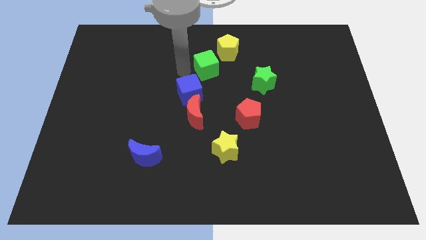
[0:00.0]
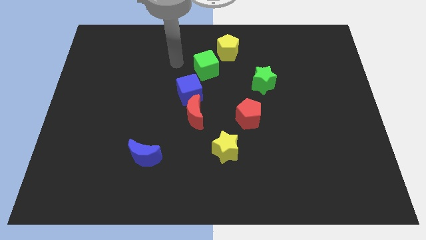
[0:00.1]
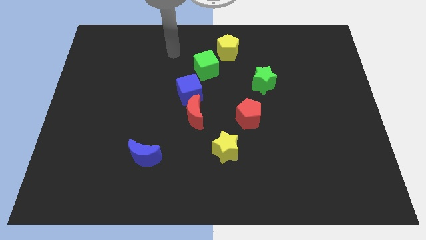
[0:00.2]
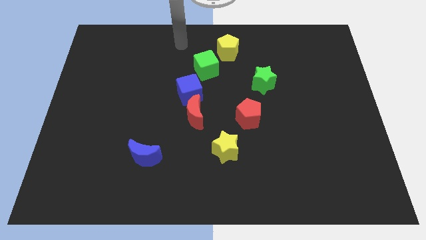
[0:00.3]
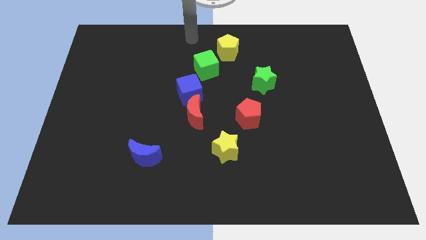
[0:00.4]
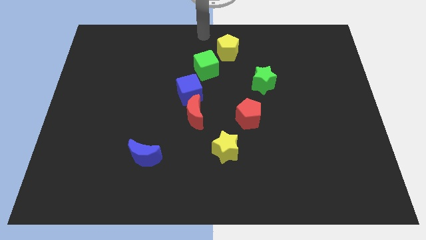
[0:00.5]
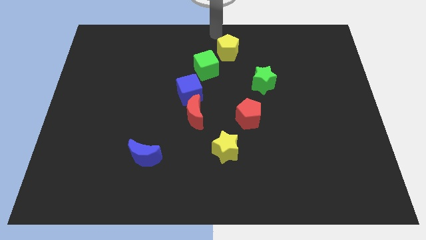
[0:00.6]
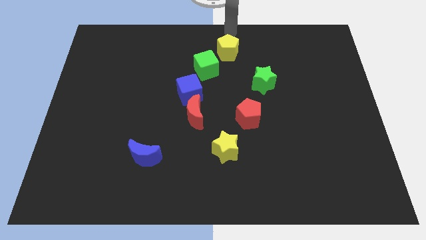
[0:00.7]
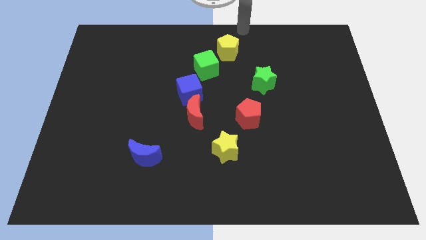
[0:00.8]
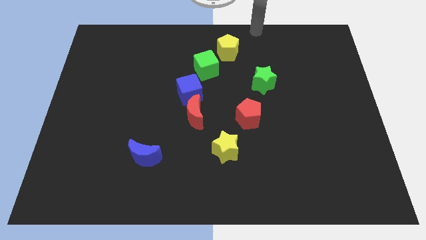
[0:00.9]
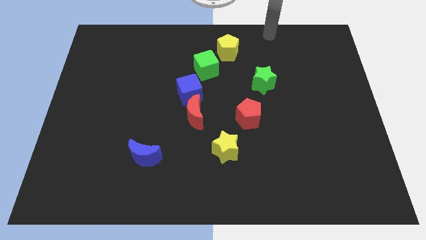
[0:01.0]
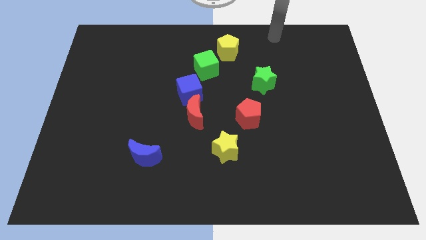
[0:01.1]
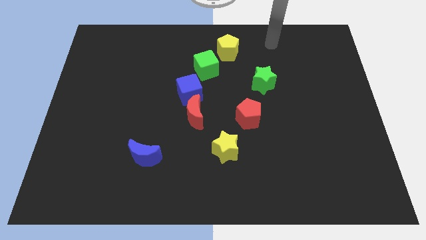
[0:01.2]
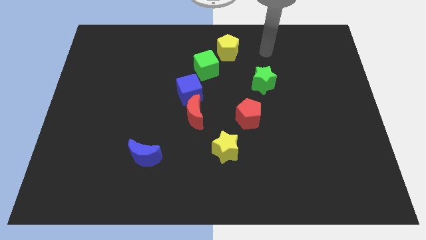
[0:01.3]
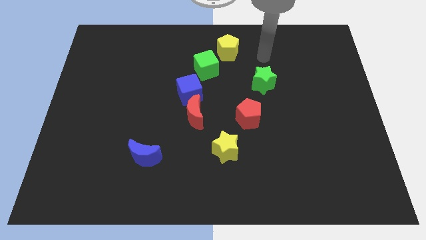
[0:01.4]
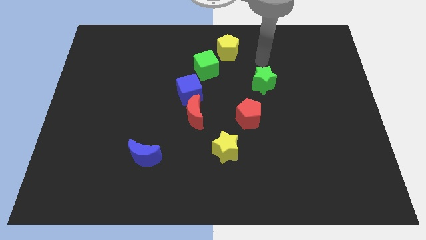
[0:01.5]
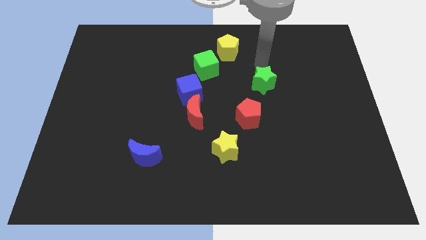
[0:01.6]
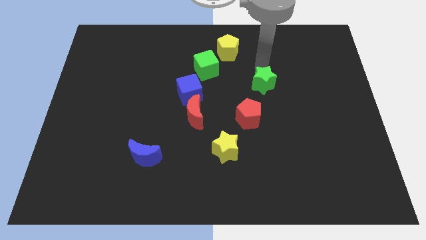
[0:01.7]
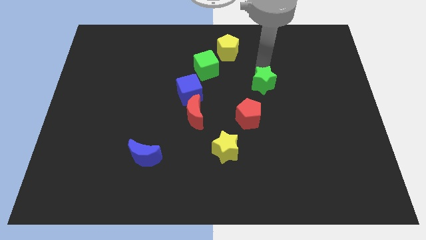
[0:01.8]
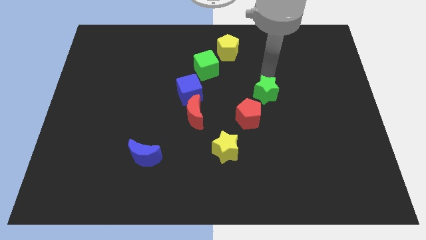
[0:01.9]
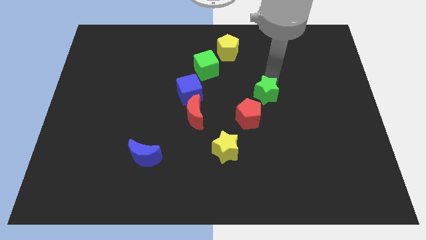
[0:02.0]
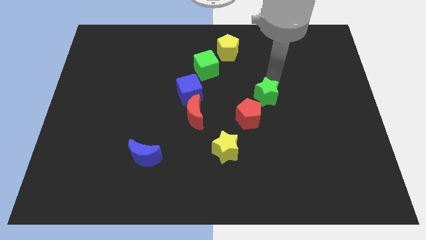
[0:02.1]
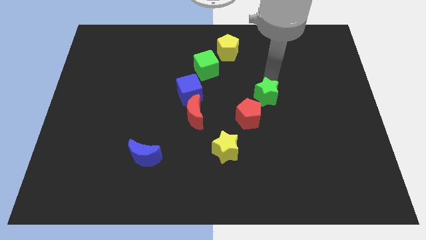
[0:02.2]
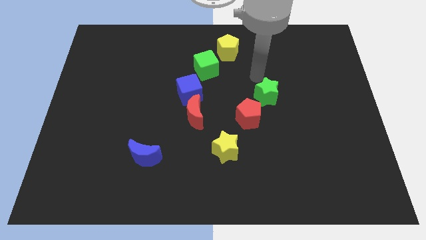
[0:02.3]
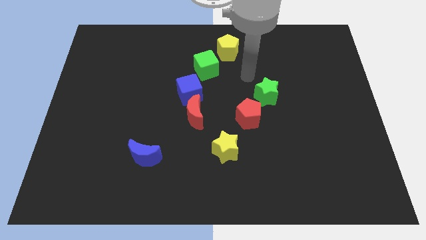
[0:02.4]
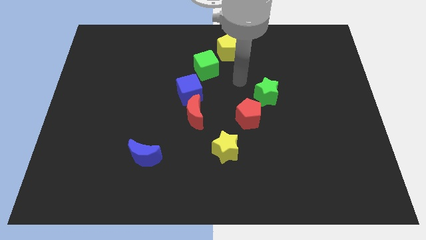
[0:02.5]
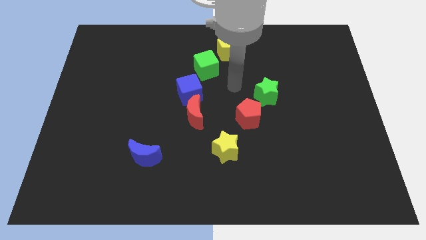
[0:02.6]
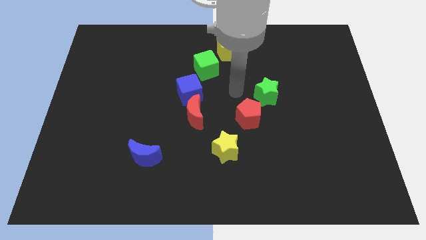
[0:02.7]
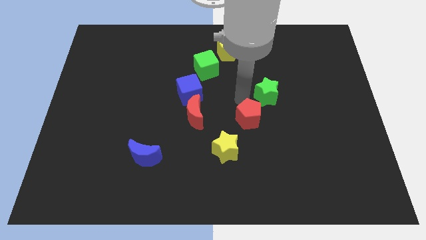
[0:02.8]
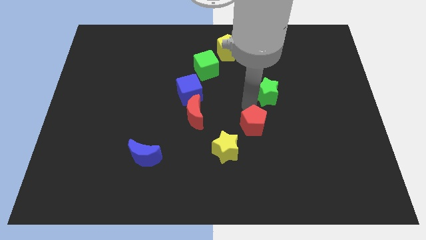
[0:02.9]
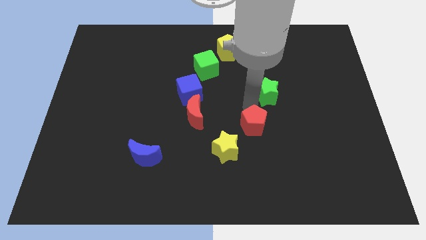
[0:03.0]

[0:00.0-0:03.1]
push the red pentagon and green star diagonally on the top right side of the yellow star

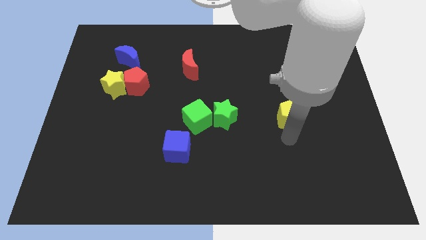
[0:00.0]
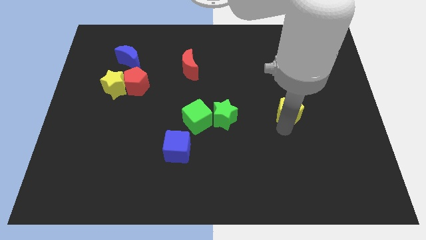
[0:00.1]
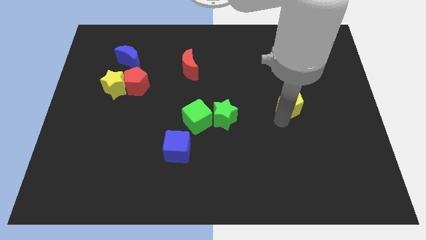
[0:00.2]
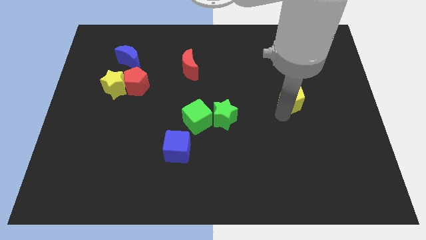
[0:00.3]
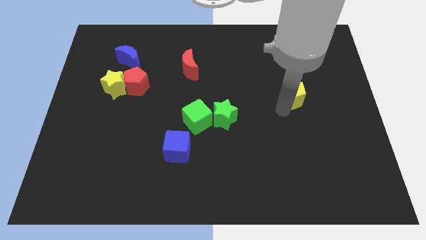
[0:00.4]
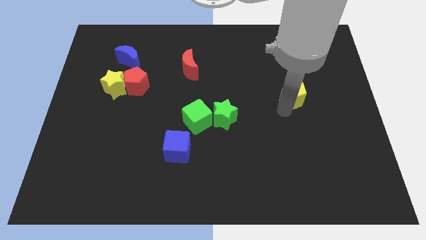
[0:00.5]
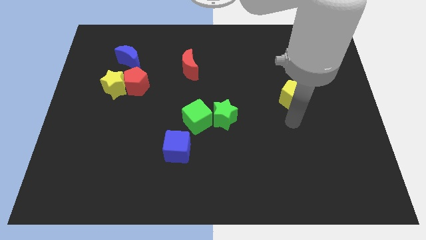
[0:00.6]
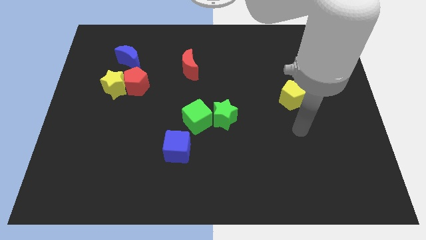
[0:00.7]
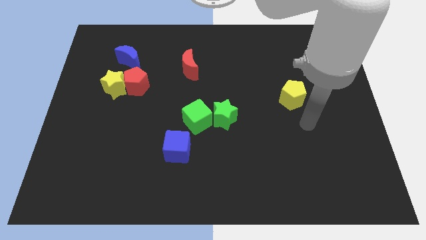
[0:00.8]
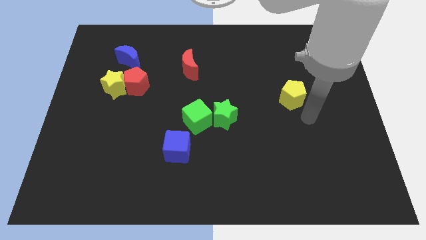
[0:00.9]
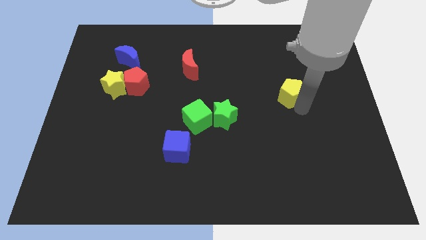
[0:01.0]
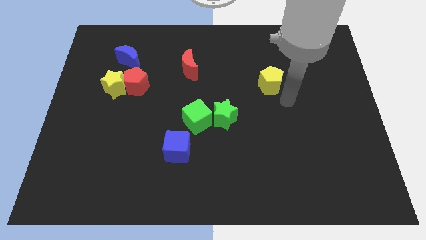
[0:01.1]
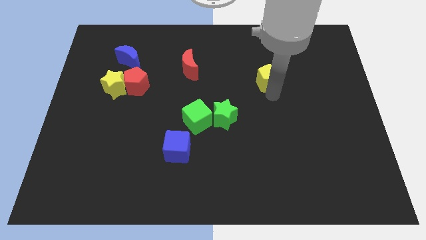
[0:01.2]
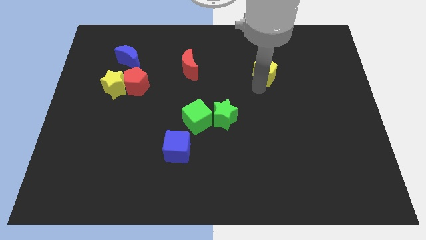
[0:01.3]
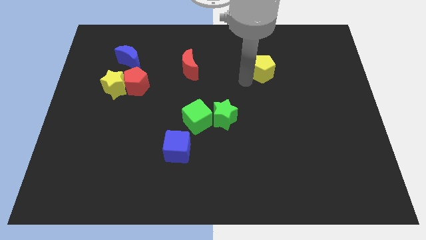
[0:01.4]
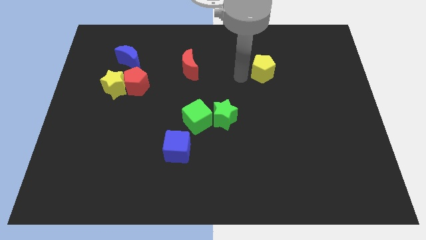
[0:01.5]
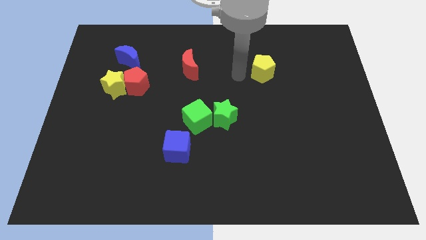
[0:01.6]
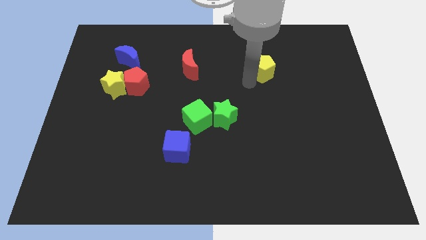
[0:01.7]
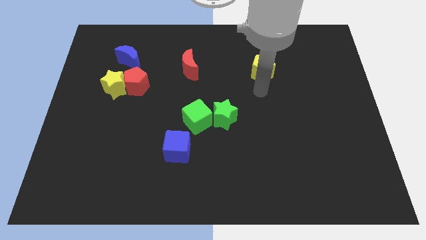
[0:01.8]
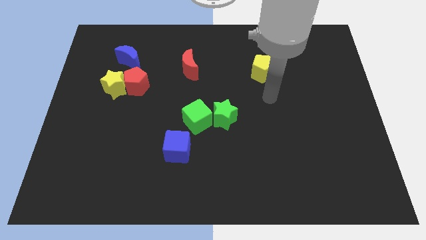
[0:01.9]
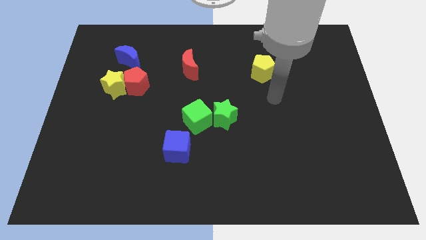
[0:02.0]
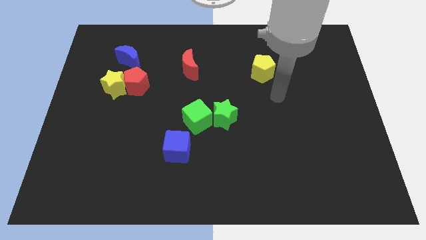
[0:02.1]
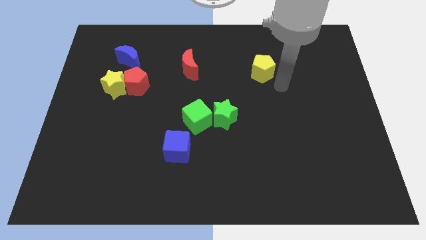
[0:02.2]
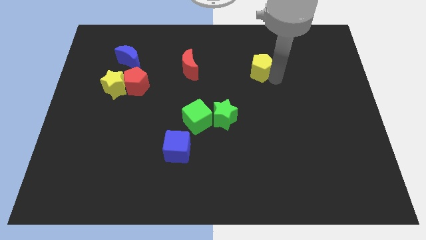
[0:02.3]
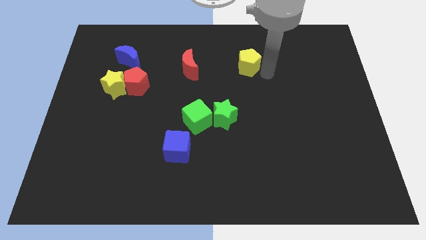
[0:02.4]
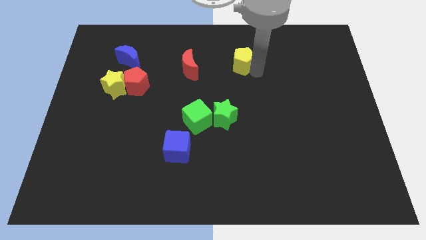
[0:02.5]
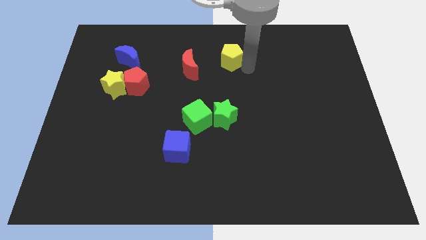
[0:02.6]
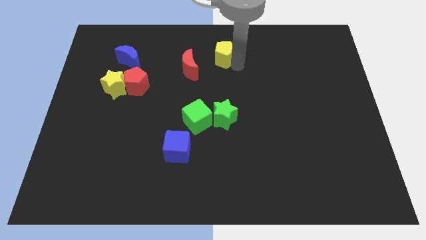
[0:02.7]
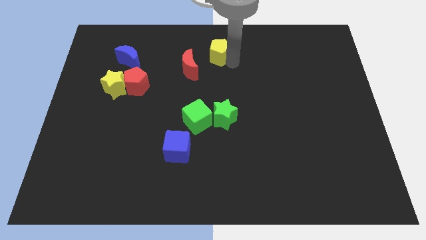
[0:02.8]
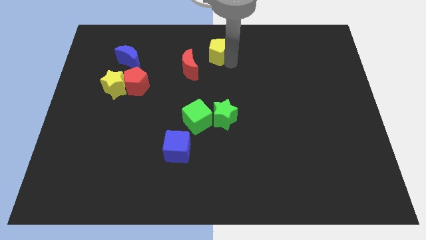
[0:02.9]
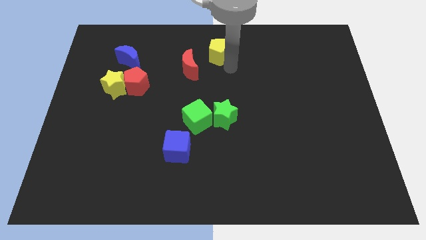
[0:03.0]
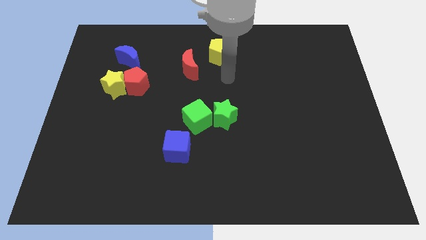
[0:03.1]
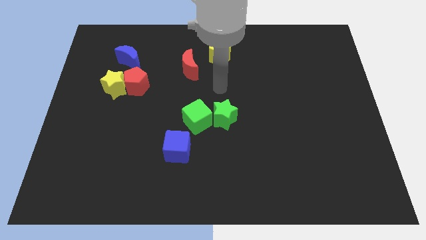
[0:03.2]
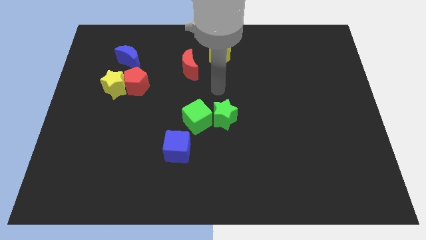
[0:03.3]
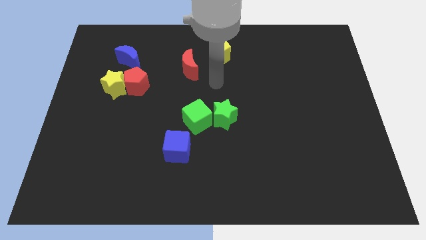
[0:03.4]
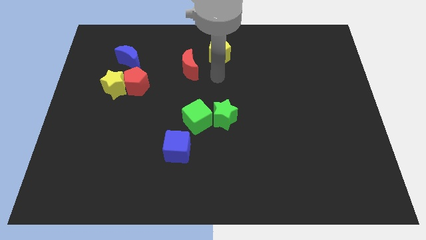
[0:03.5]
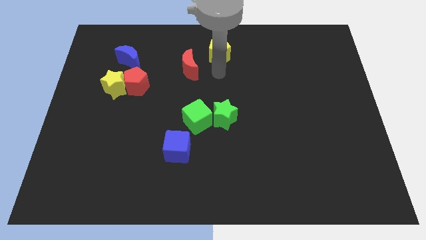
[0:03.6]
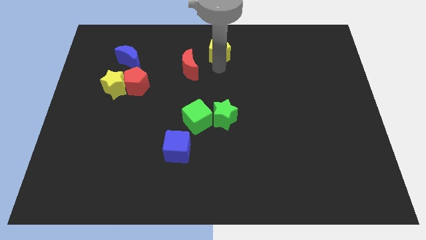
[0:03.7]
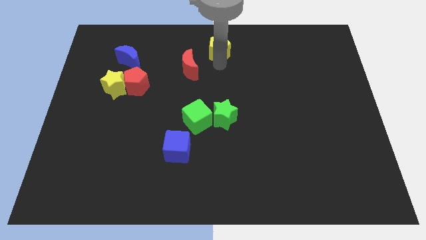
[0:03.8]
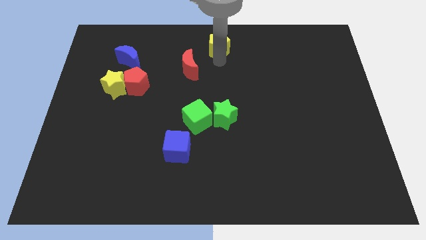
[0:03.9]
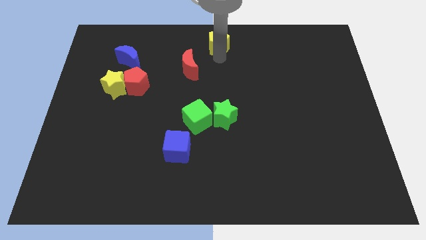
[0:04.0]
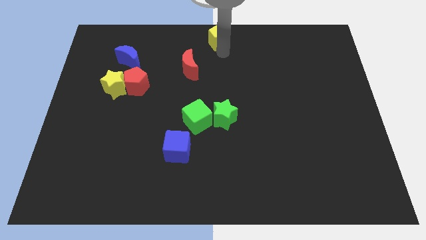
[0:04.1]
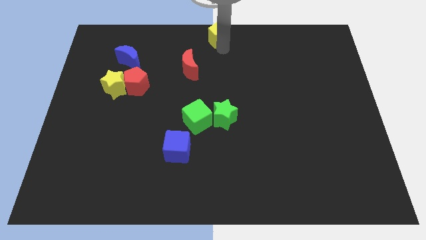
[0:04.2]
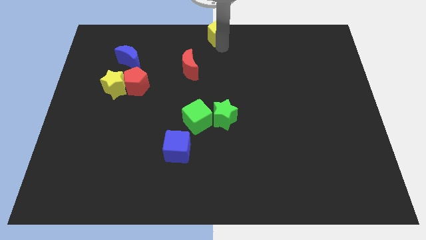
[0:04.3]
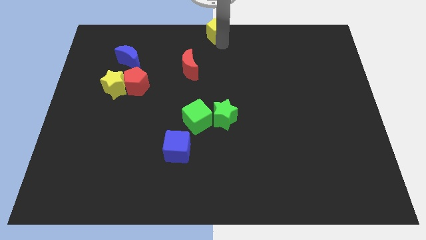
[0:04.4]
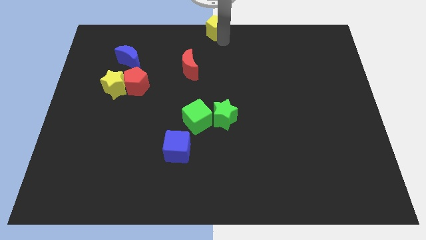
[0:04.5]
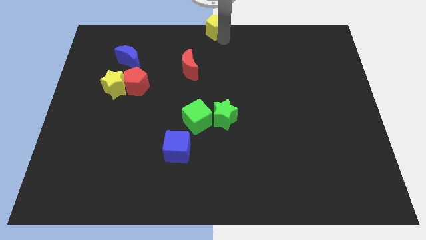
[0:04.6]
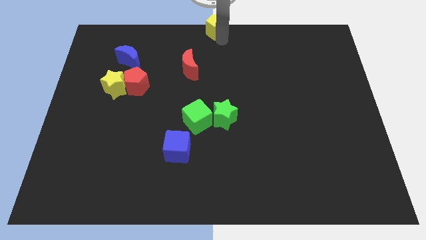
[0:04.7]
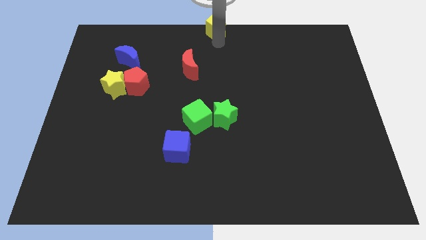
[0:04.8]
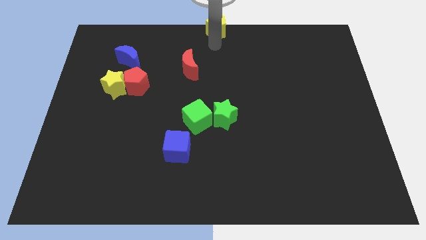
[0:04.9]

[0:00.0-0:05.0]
place the yellow pentagon at the top center of the board

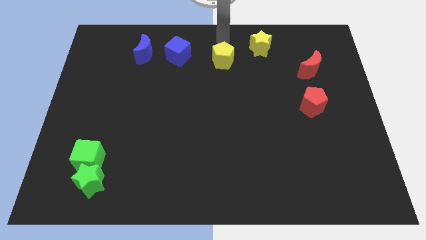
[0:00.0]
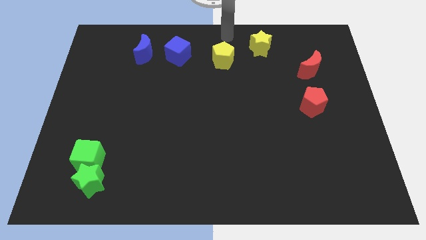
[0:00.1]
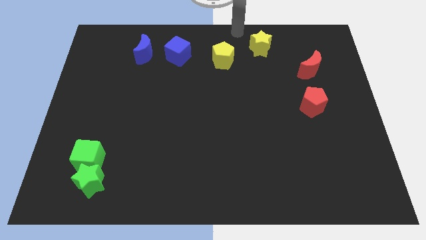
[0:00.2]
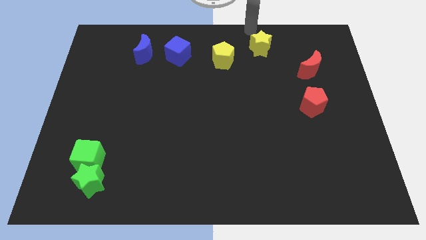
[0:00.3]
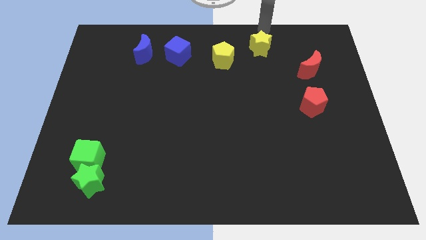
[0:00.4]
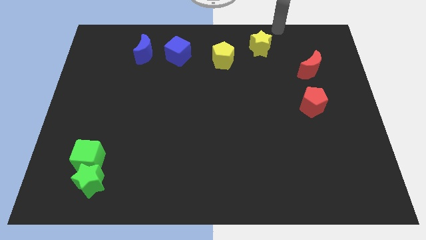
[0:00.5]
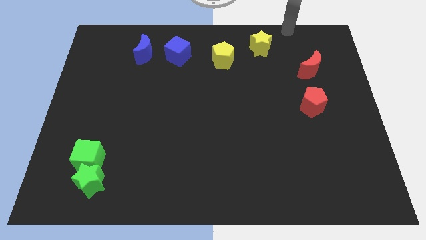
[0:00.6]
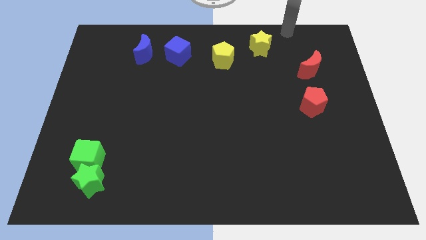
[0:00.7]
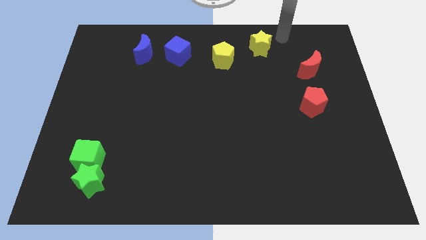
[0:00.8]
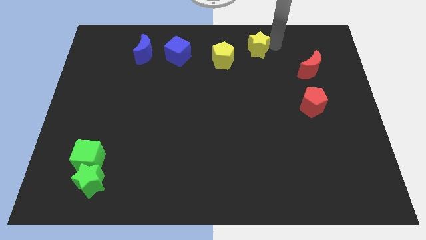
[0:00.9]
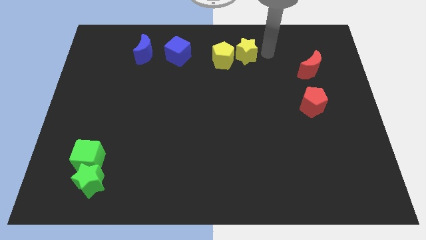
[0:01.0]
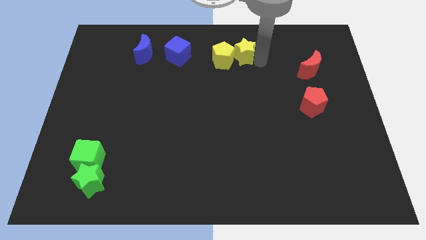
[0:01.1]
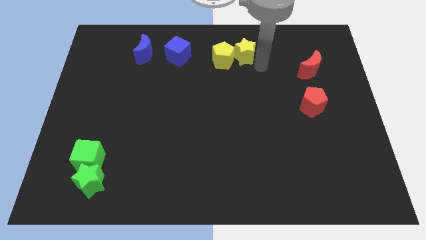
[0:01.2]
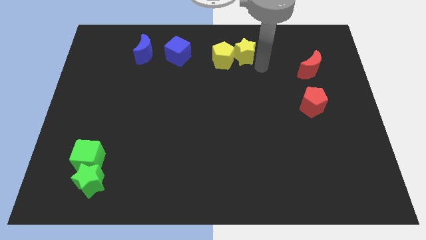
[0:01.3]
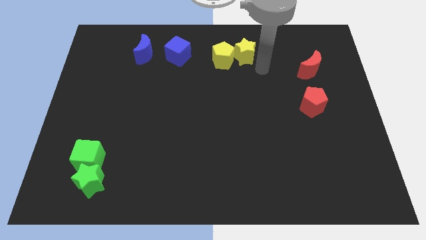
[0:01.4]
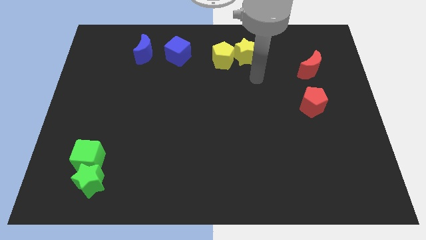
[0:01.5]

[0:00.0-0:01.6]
place the yellow star to the right side of yellow pentagon
